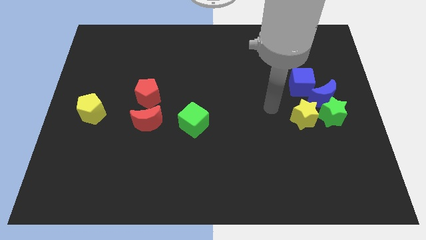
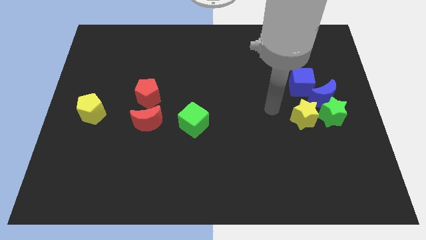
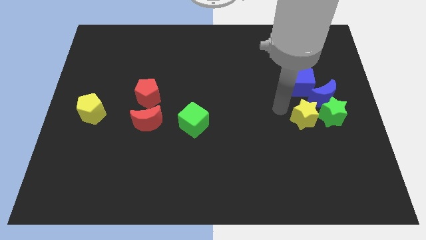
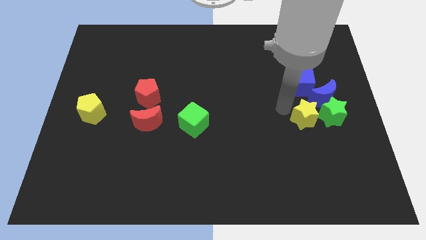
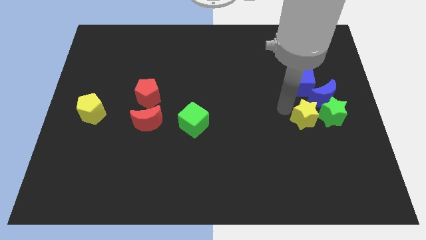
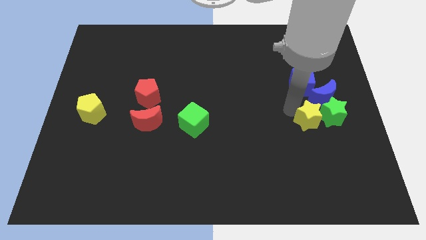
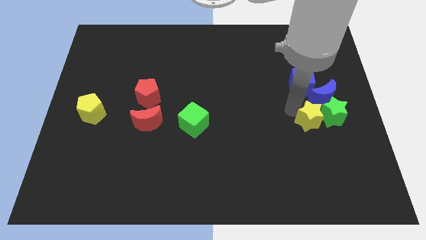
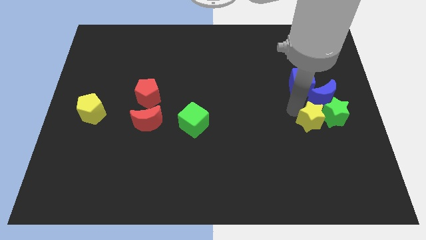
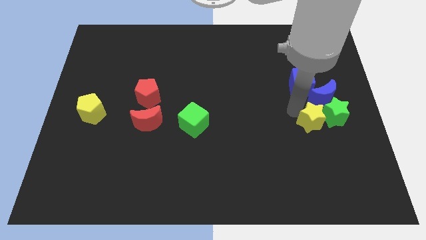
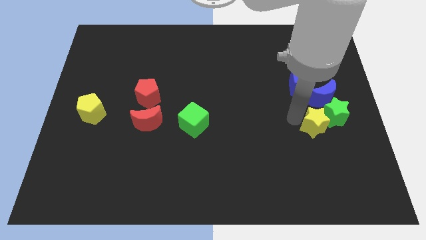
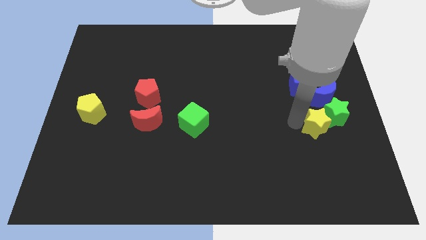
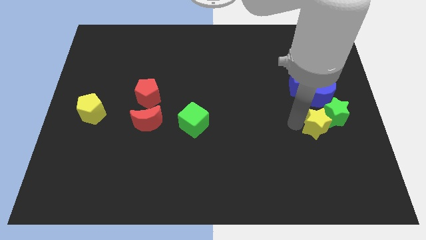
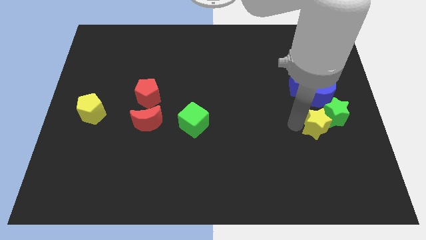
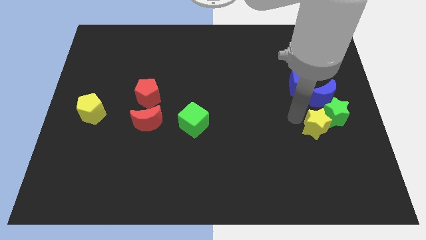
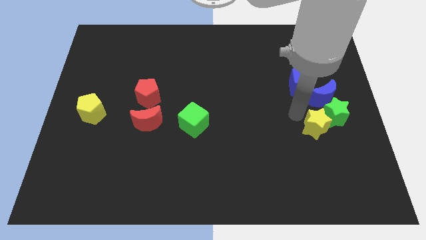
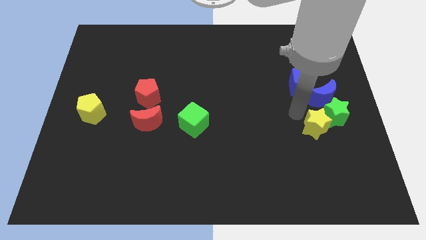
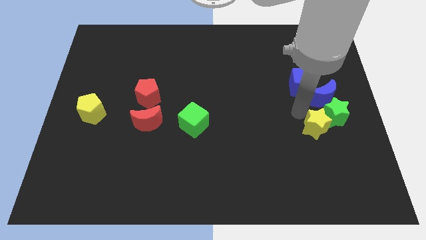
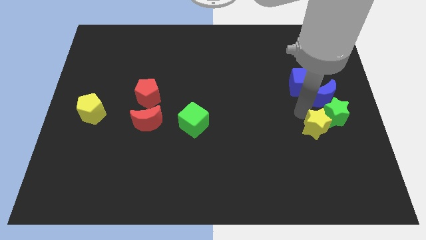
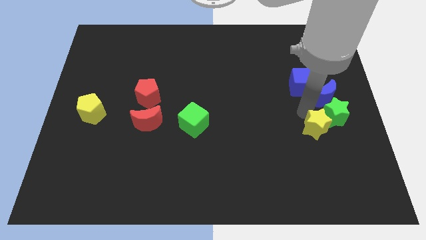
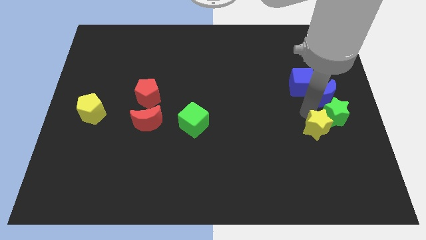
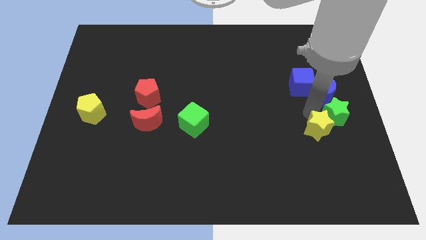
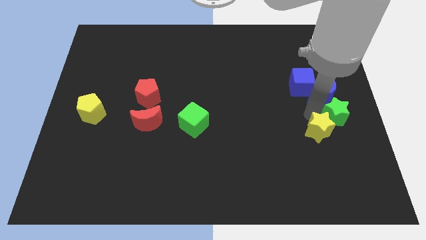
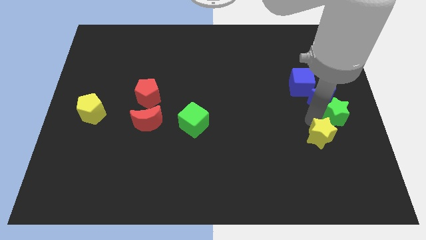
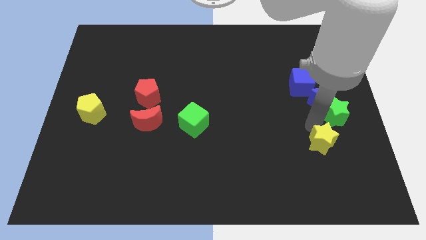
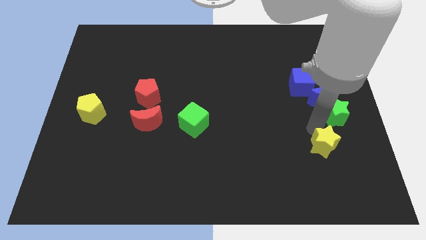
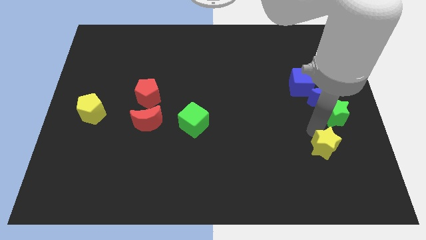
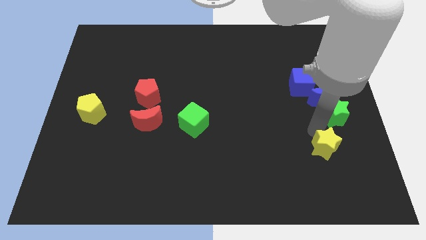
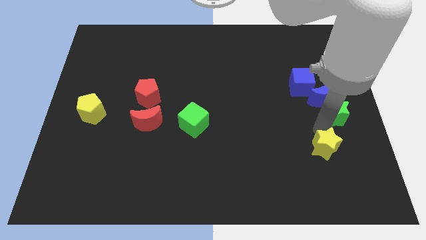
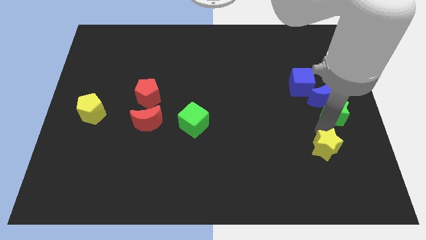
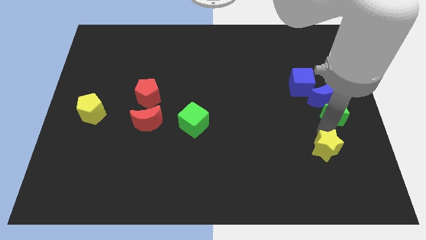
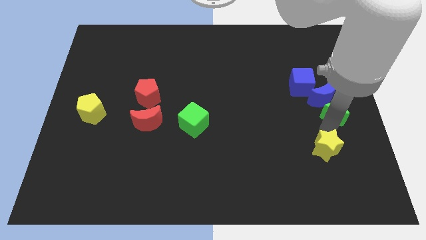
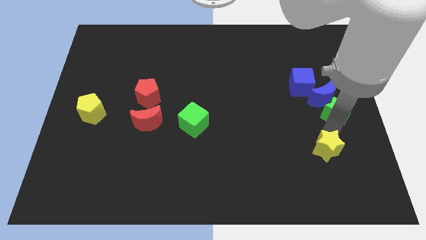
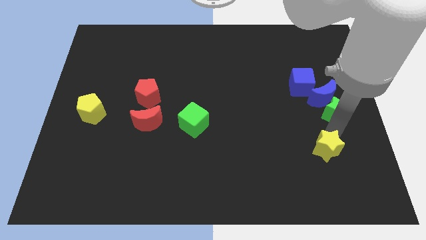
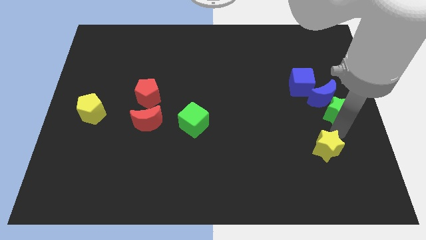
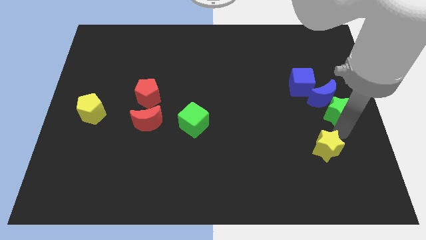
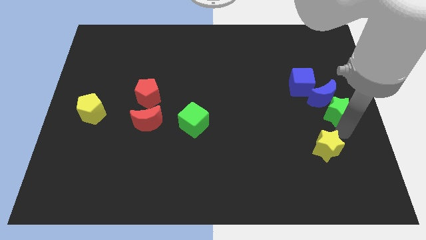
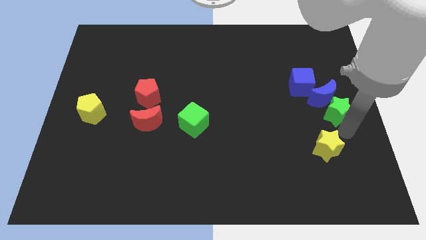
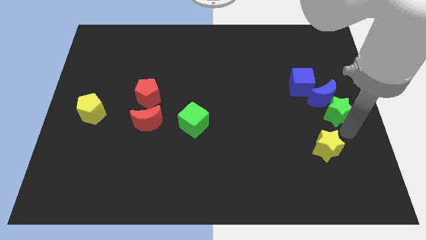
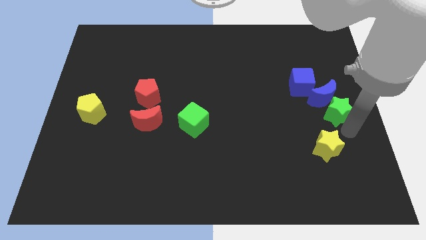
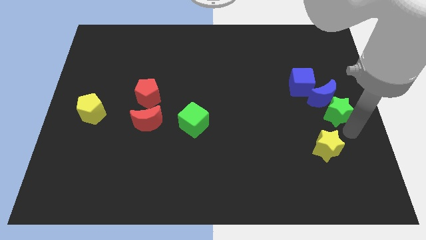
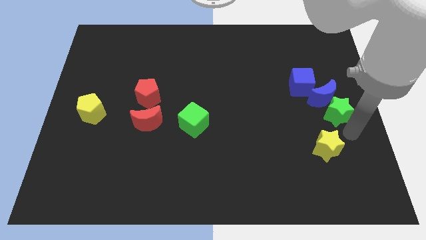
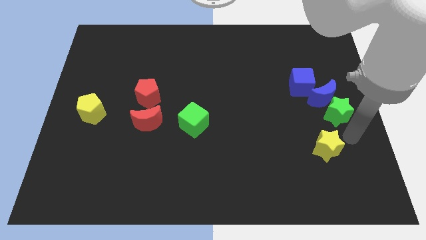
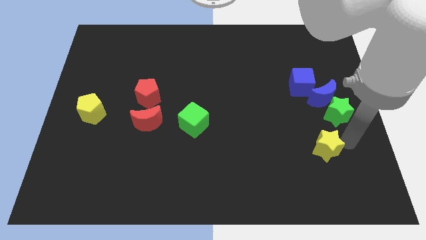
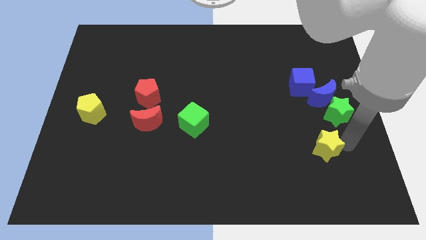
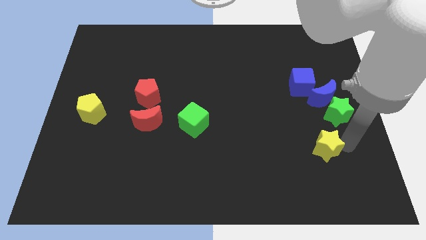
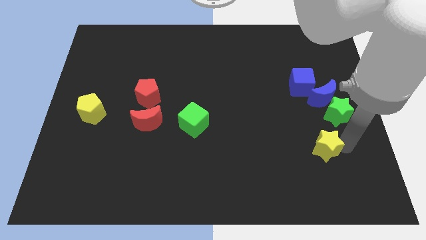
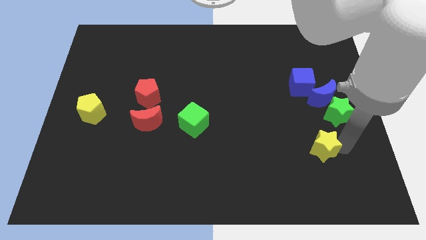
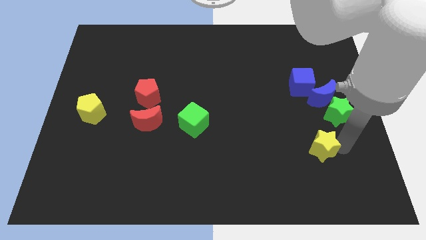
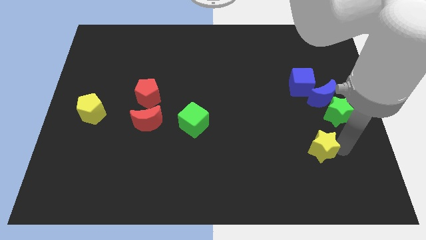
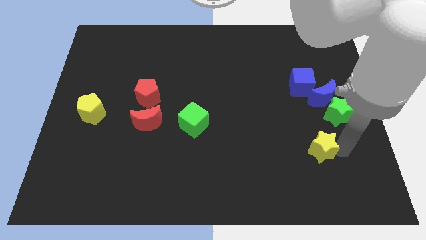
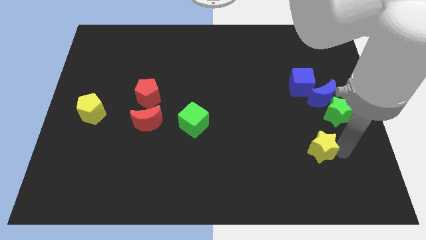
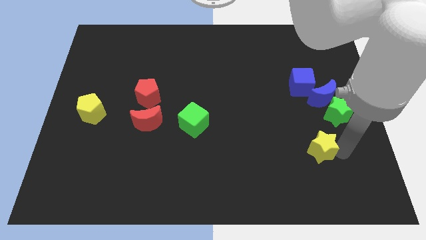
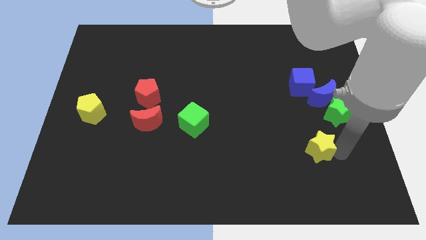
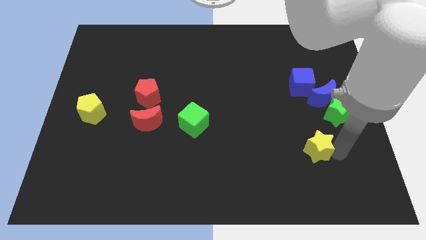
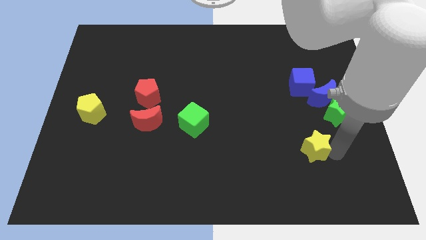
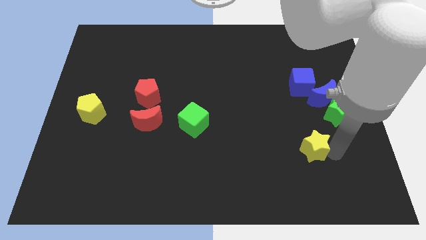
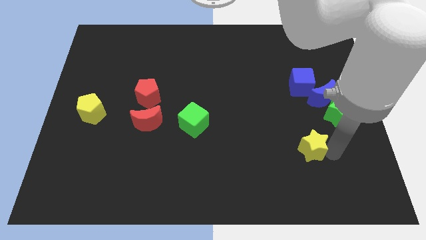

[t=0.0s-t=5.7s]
move the yellow star away from the left side of the green star

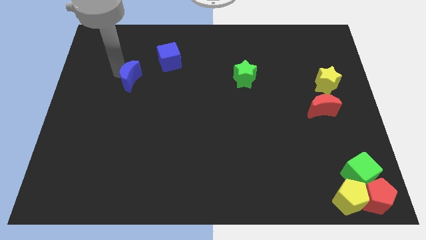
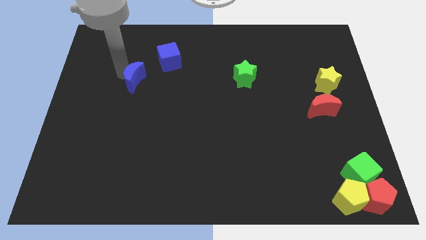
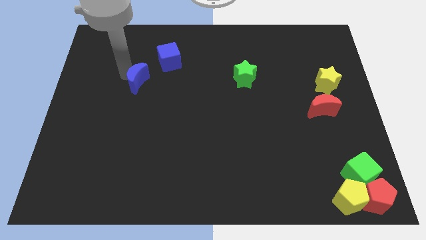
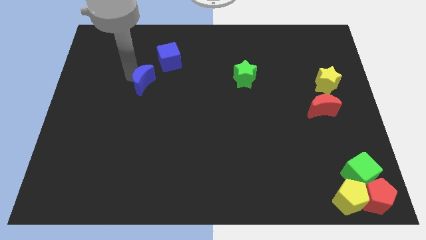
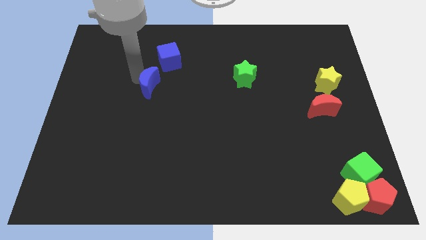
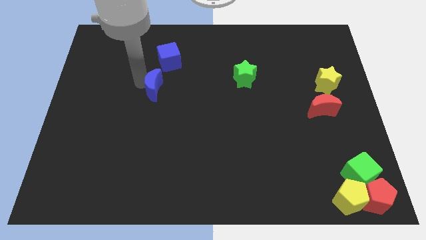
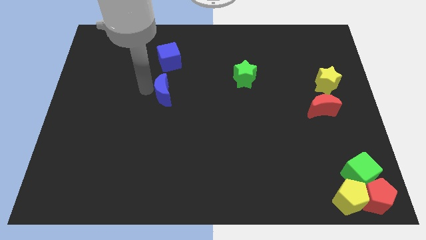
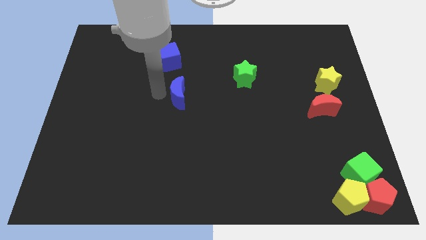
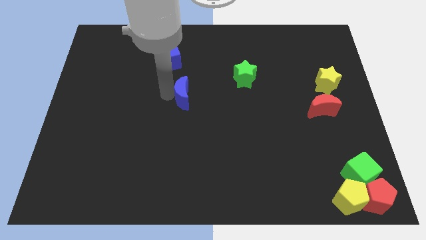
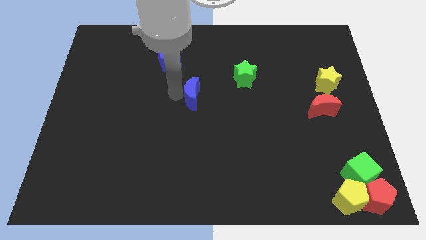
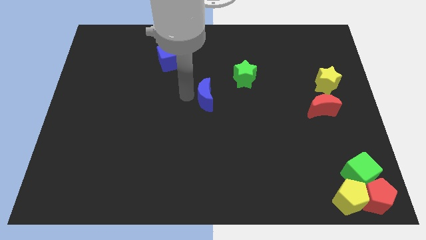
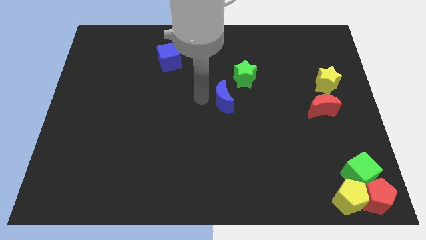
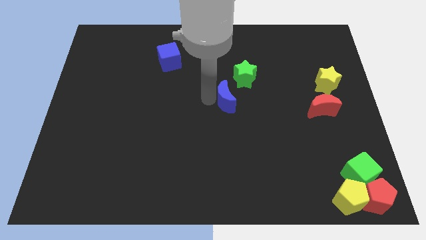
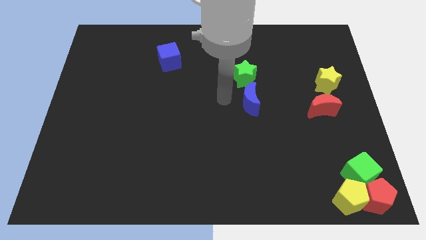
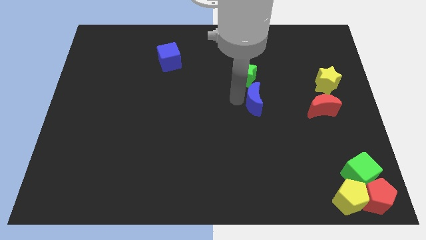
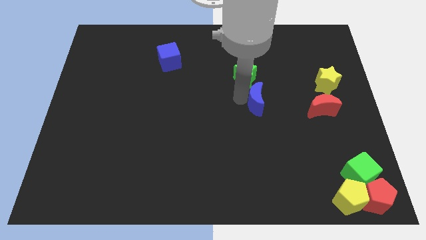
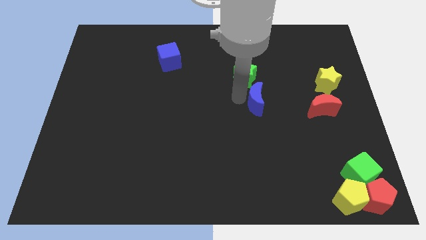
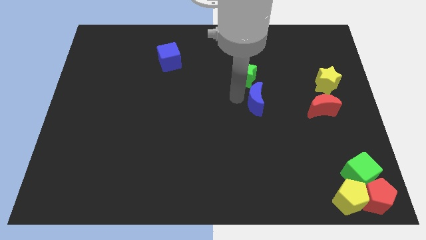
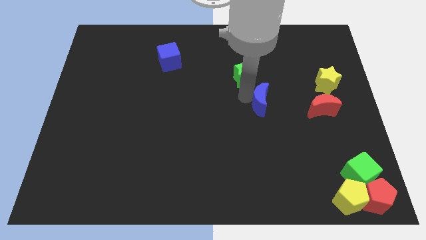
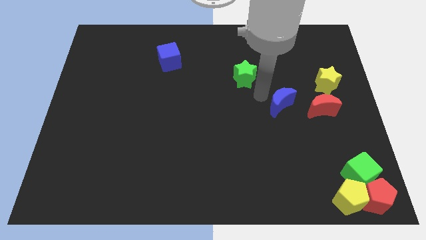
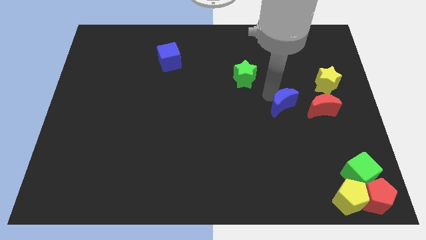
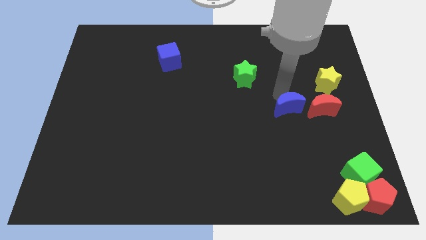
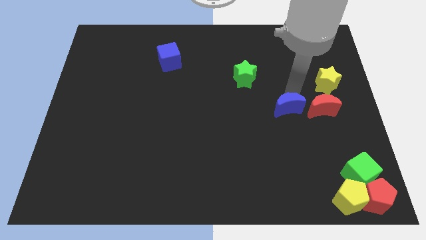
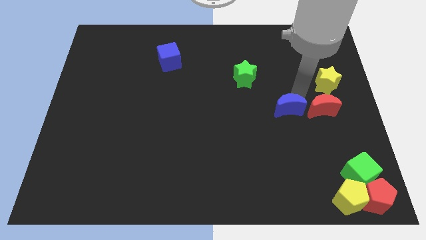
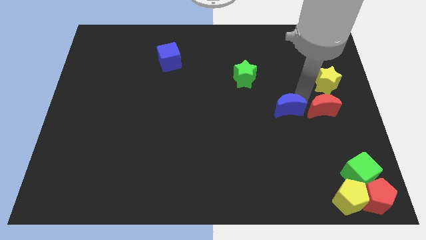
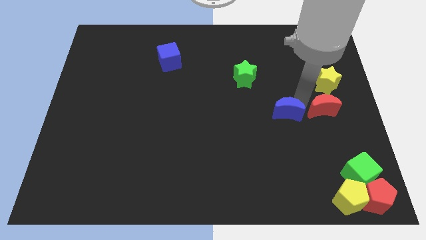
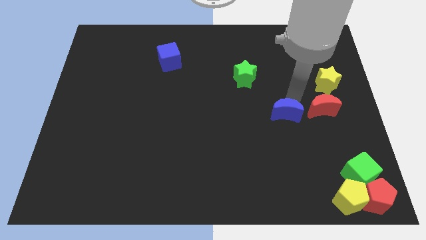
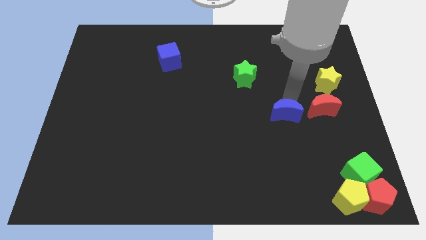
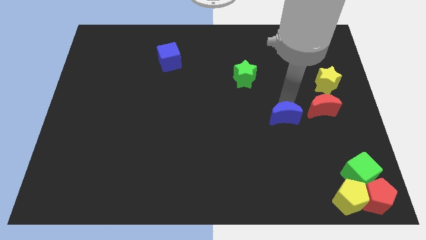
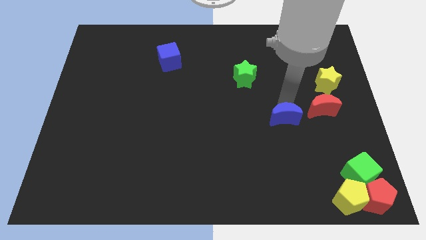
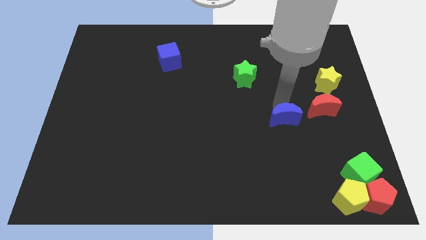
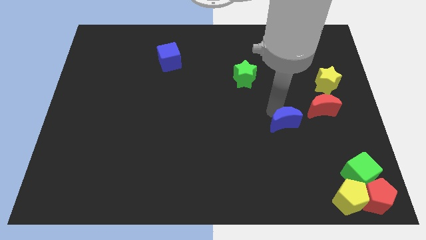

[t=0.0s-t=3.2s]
push blue crescent towards the red crescent
